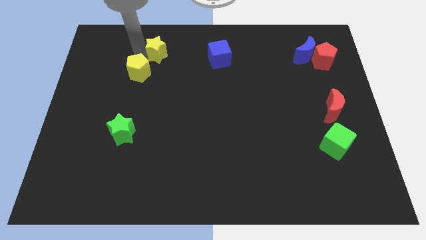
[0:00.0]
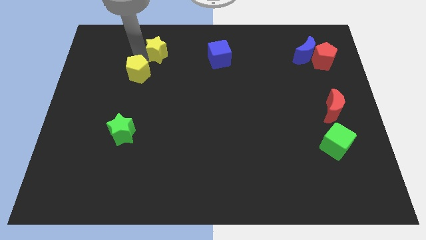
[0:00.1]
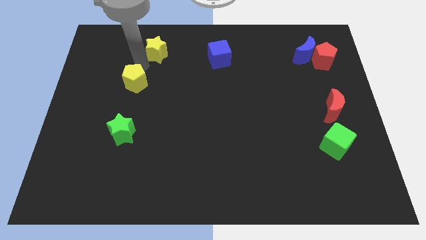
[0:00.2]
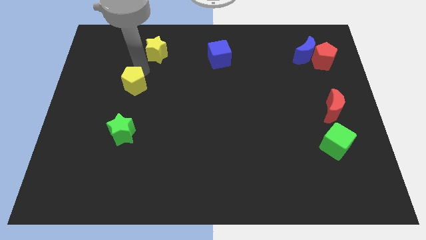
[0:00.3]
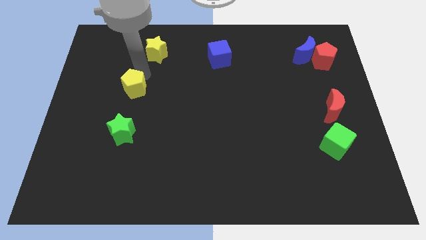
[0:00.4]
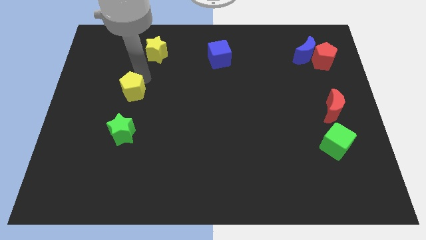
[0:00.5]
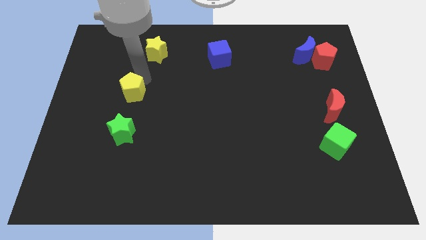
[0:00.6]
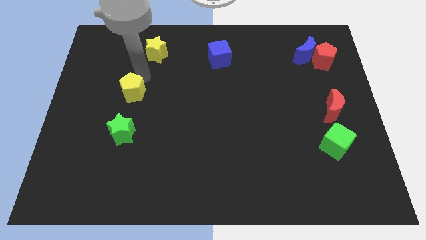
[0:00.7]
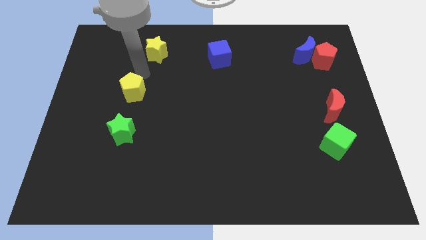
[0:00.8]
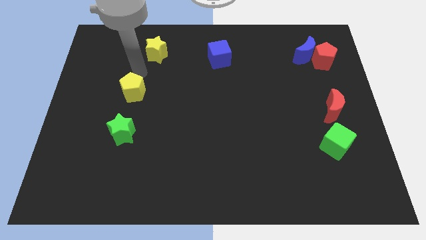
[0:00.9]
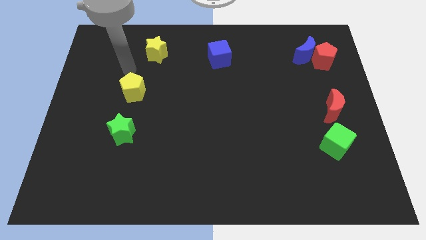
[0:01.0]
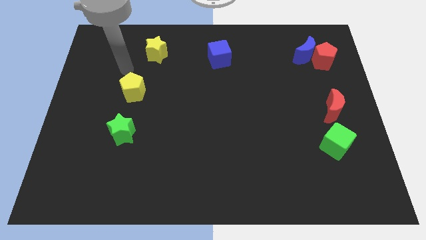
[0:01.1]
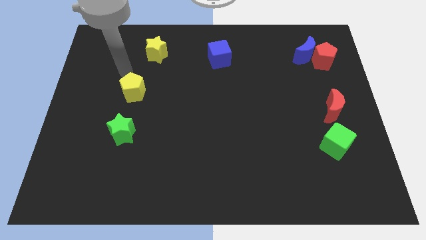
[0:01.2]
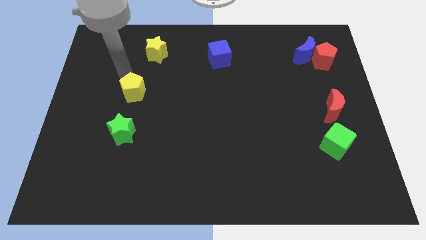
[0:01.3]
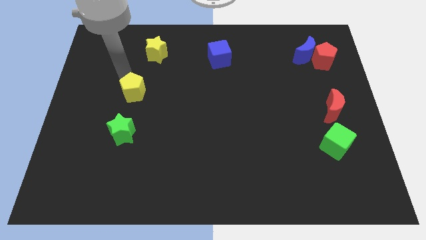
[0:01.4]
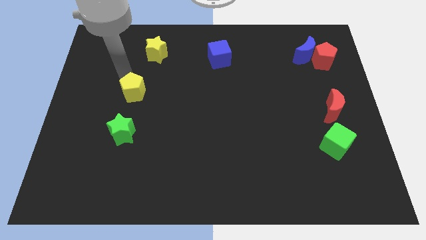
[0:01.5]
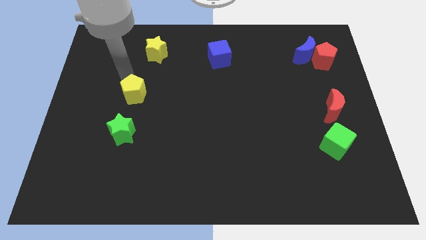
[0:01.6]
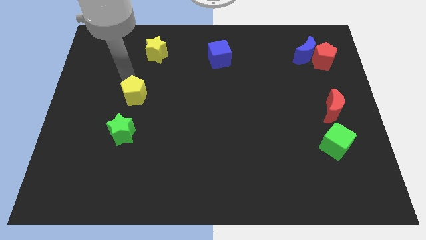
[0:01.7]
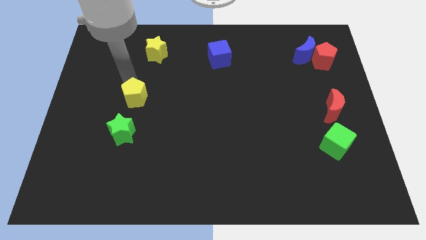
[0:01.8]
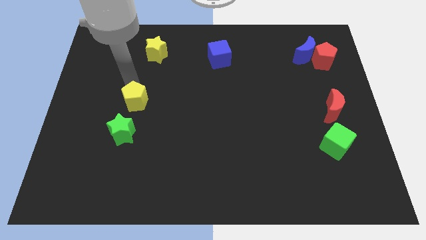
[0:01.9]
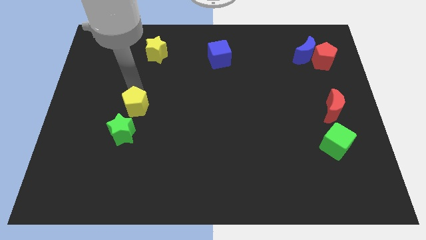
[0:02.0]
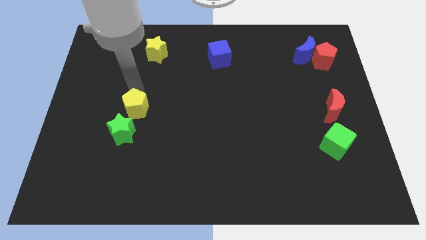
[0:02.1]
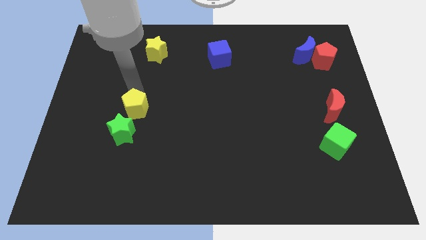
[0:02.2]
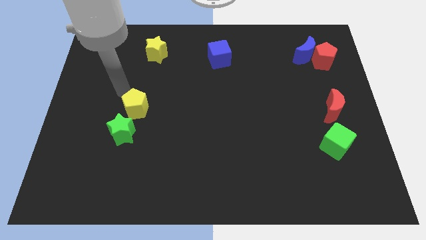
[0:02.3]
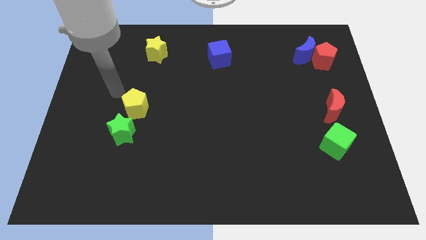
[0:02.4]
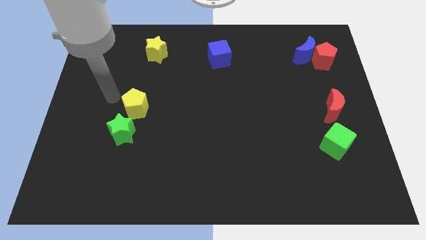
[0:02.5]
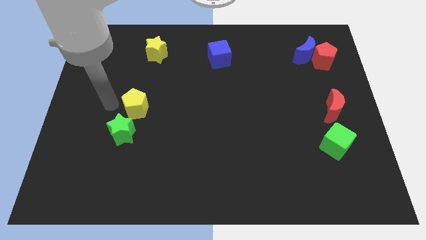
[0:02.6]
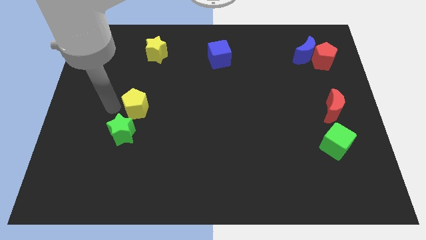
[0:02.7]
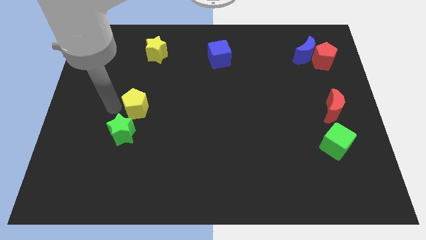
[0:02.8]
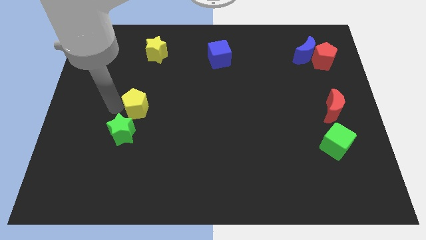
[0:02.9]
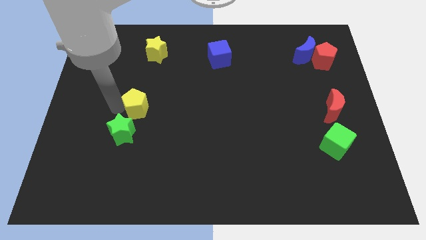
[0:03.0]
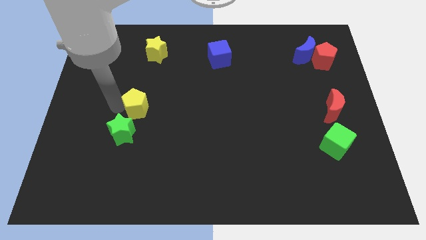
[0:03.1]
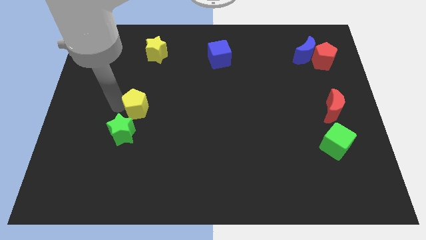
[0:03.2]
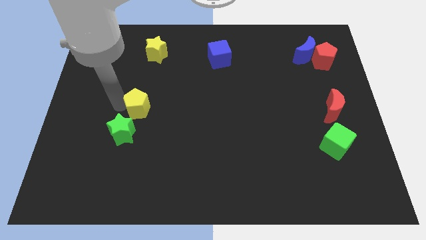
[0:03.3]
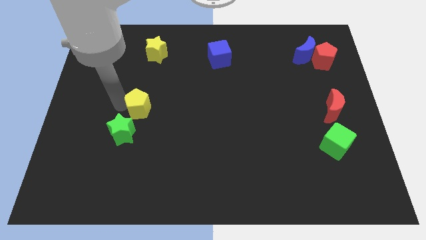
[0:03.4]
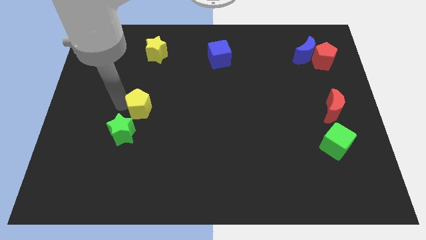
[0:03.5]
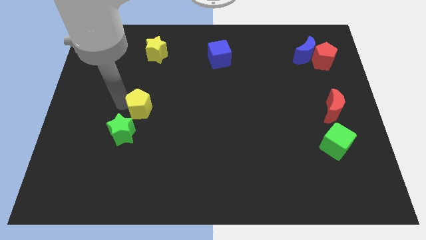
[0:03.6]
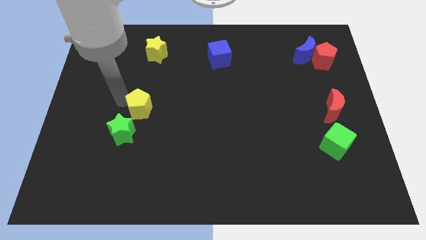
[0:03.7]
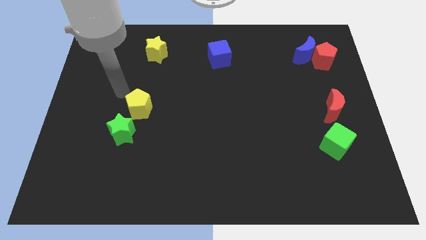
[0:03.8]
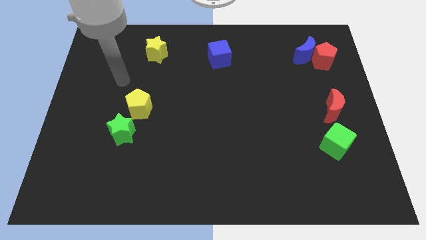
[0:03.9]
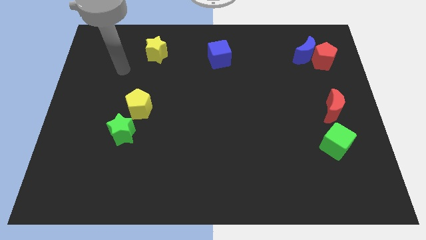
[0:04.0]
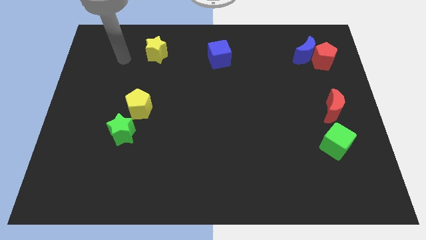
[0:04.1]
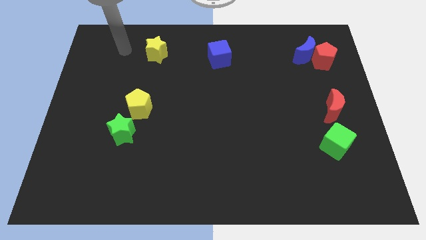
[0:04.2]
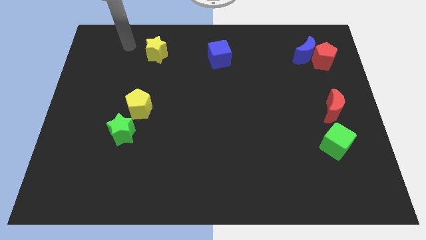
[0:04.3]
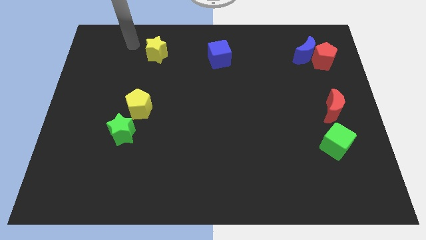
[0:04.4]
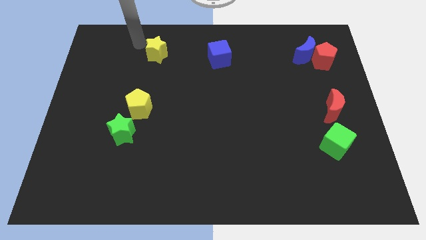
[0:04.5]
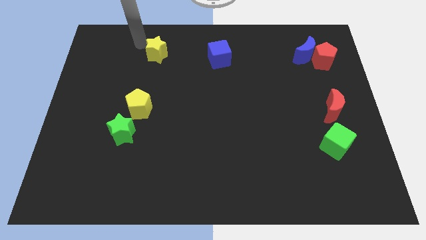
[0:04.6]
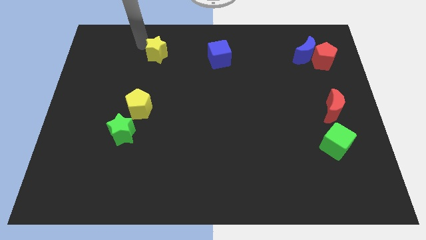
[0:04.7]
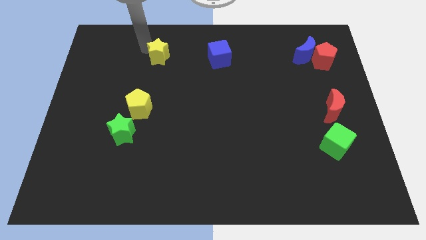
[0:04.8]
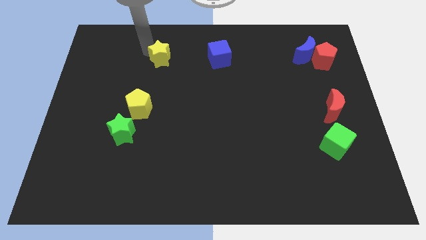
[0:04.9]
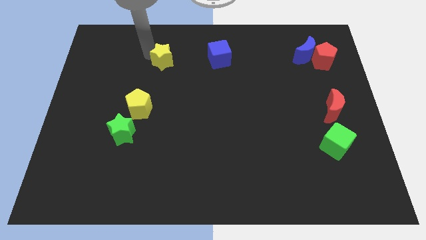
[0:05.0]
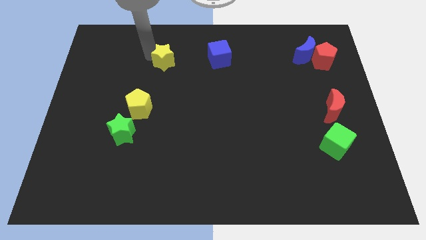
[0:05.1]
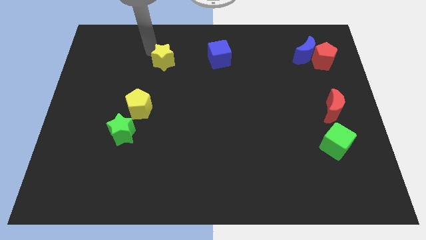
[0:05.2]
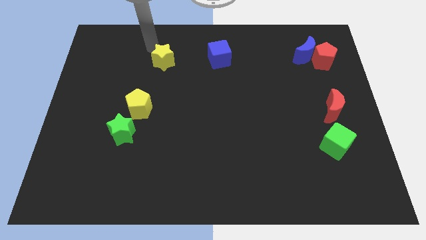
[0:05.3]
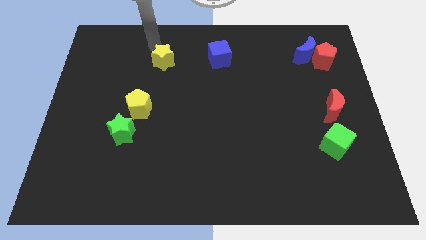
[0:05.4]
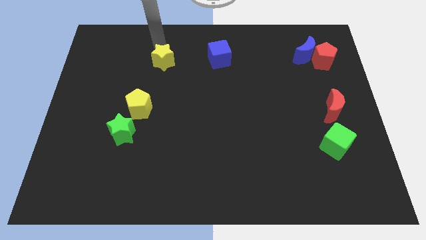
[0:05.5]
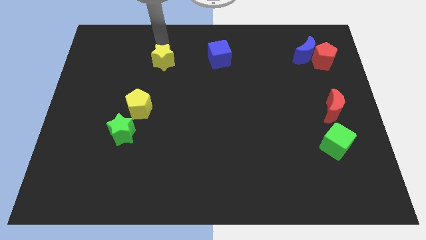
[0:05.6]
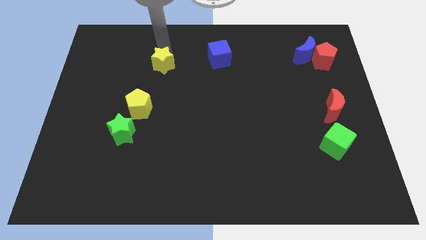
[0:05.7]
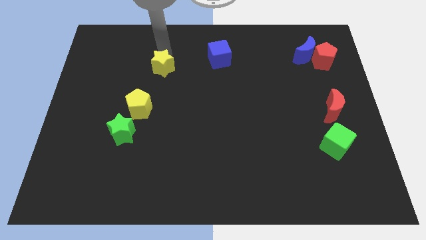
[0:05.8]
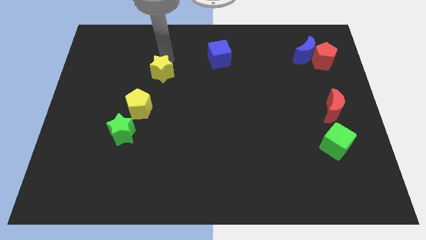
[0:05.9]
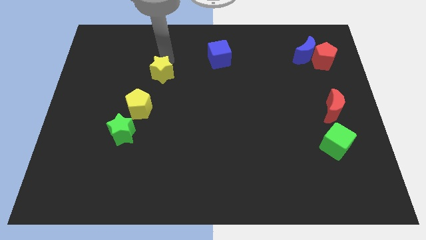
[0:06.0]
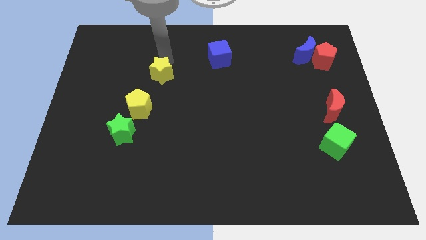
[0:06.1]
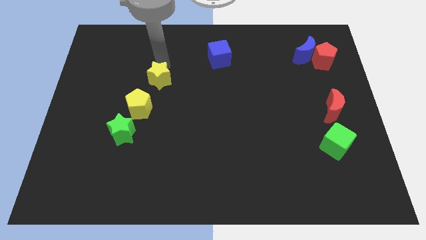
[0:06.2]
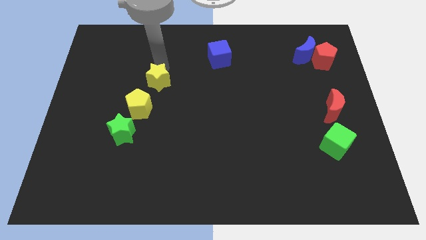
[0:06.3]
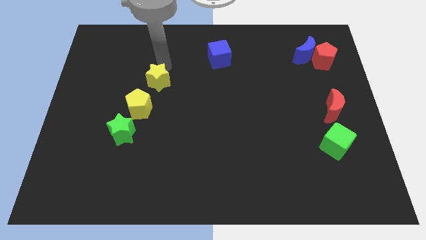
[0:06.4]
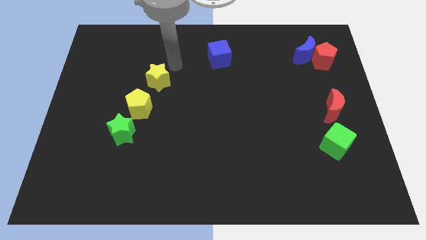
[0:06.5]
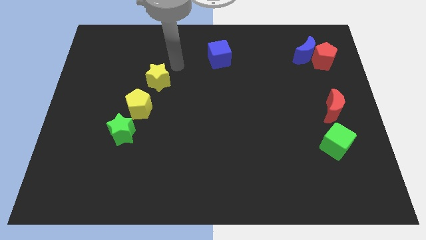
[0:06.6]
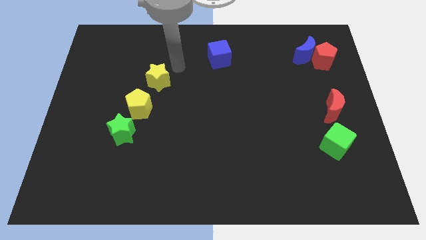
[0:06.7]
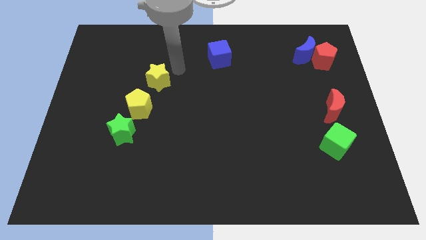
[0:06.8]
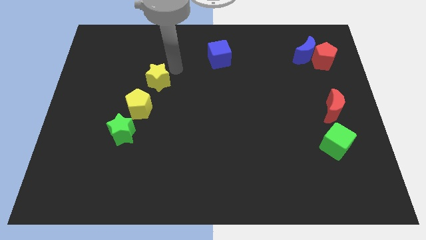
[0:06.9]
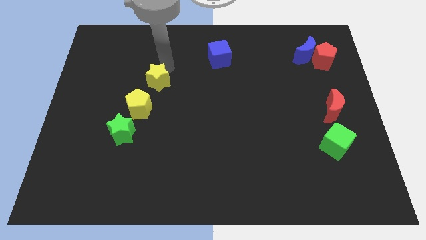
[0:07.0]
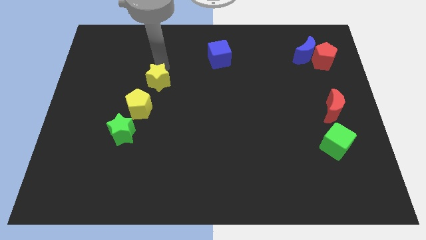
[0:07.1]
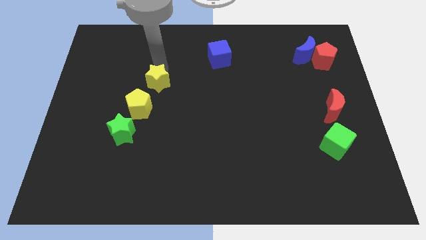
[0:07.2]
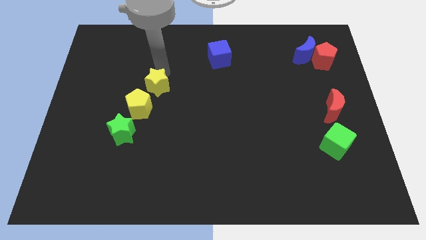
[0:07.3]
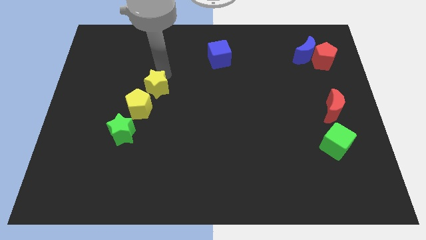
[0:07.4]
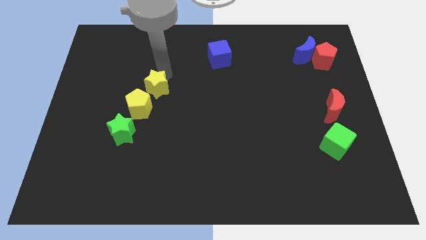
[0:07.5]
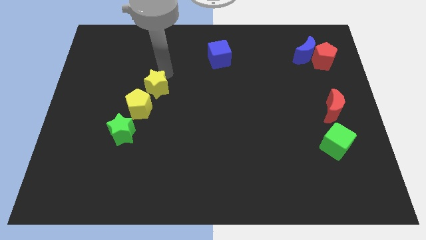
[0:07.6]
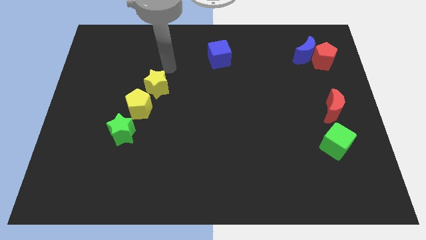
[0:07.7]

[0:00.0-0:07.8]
place the yellow blocks at the top of the green star

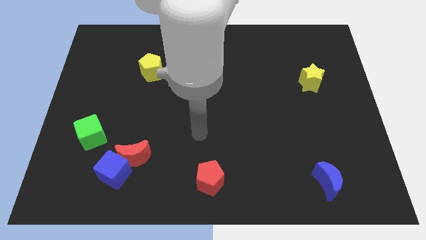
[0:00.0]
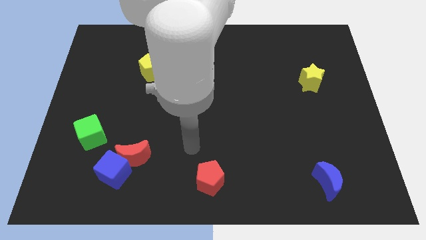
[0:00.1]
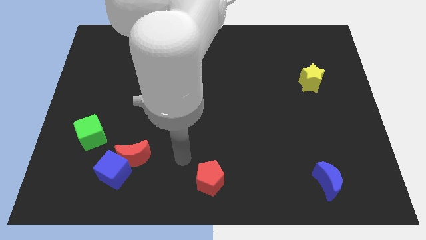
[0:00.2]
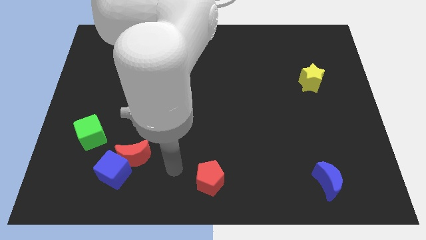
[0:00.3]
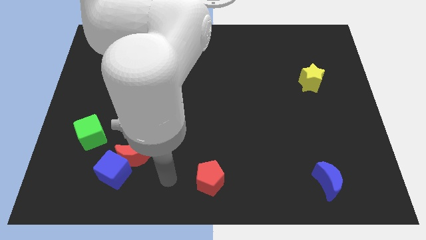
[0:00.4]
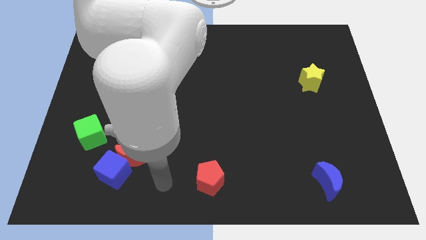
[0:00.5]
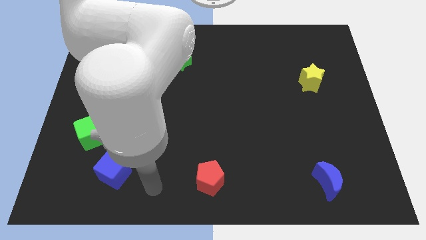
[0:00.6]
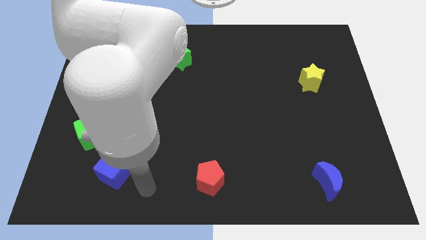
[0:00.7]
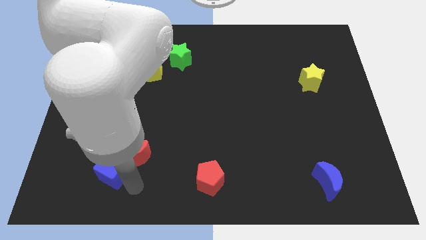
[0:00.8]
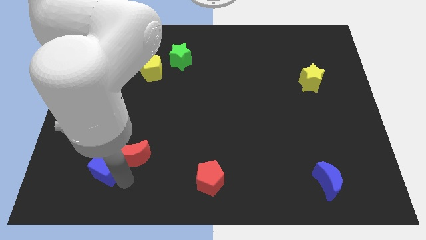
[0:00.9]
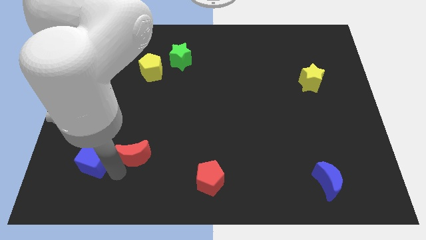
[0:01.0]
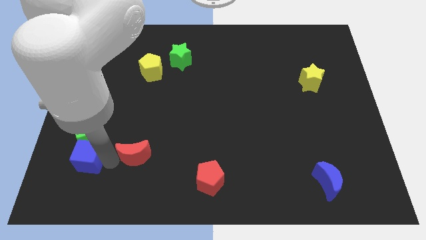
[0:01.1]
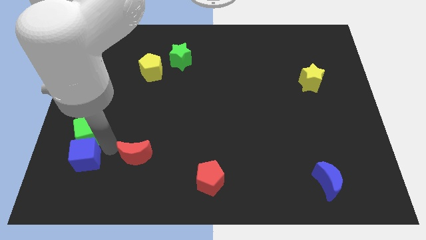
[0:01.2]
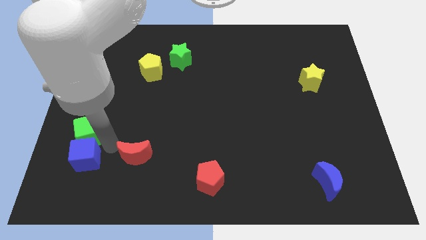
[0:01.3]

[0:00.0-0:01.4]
place the blue cube below the green cube
